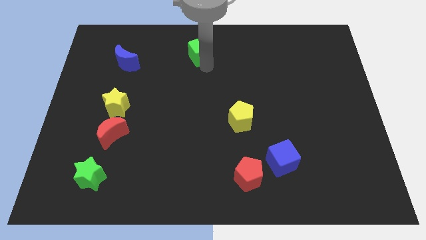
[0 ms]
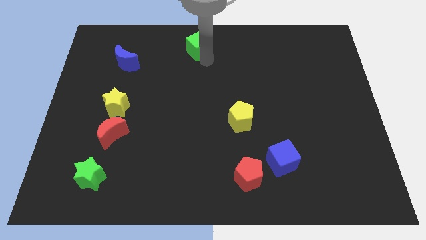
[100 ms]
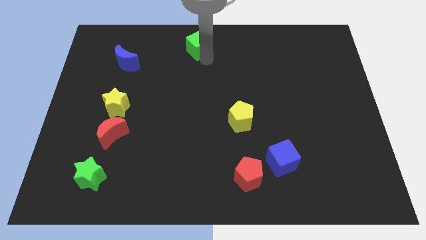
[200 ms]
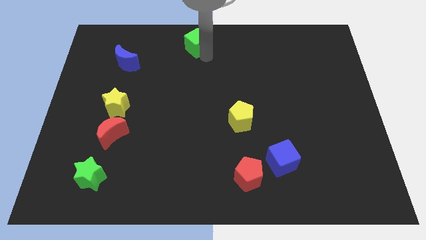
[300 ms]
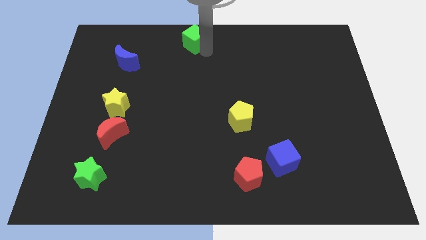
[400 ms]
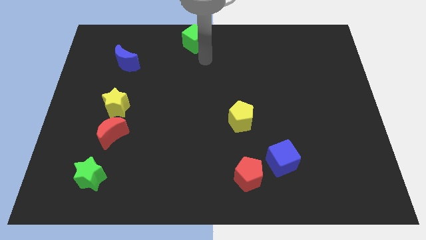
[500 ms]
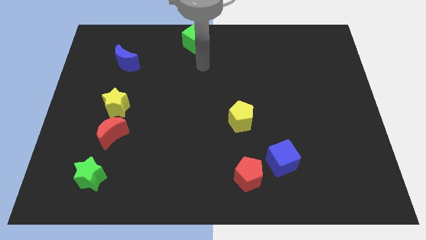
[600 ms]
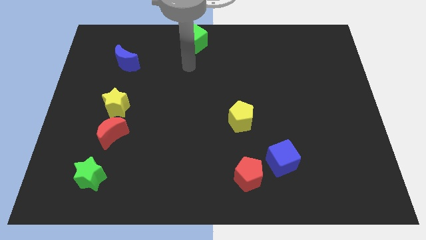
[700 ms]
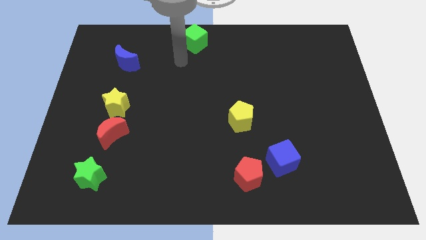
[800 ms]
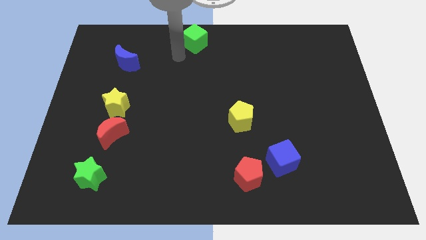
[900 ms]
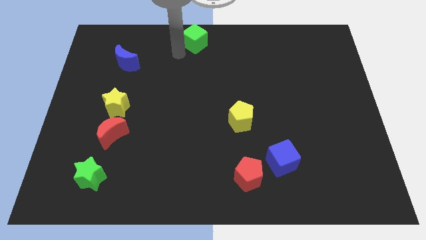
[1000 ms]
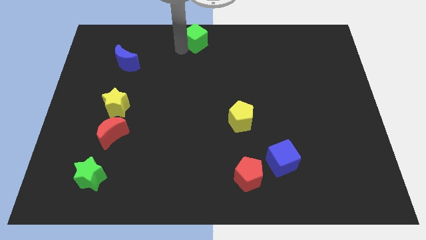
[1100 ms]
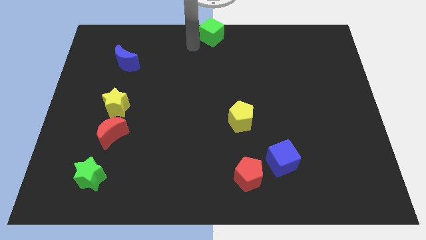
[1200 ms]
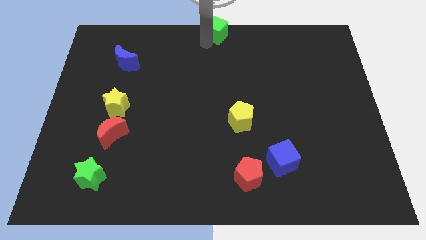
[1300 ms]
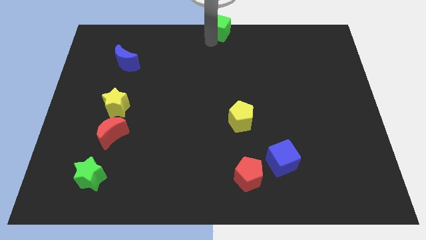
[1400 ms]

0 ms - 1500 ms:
move the green cube to the top center of the board

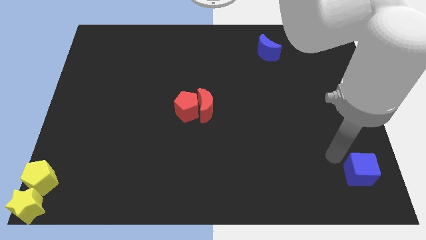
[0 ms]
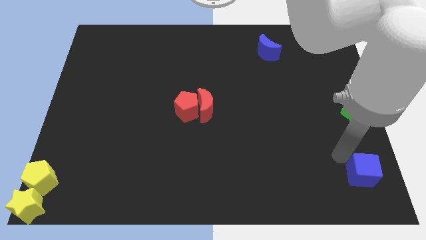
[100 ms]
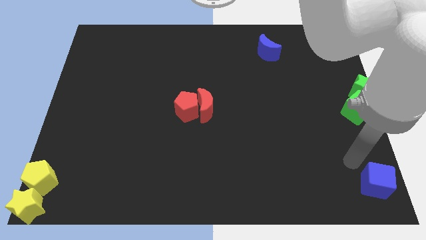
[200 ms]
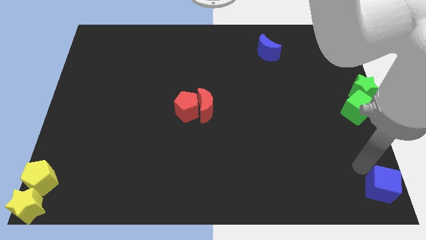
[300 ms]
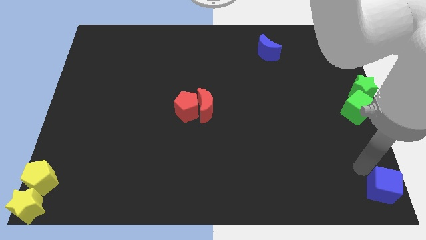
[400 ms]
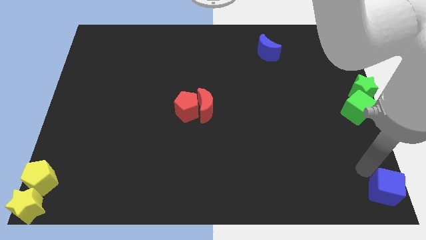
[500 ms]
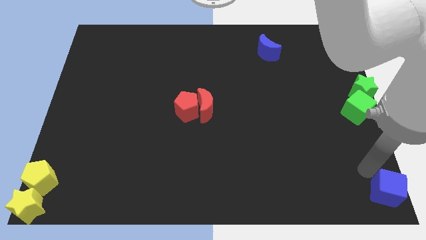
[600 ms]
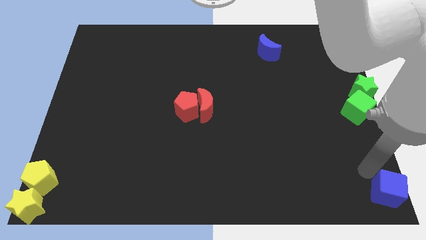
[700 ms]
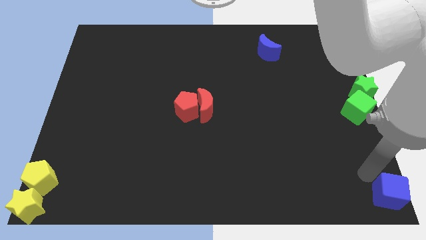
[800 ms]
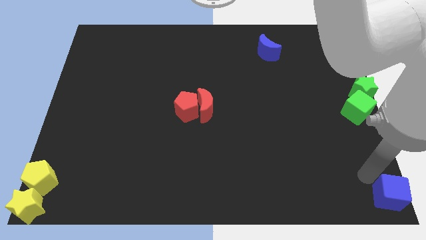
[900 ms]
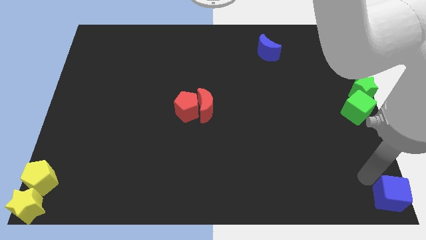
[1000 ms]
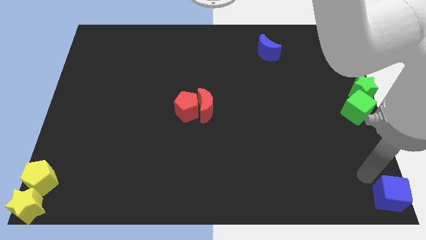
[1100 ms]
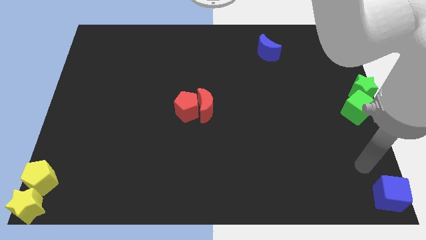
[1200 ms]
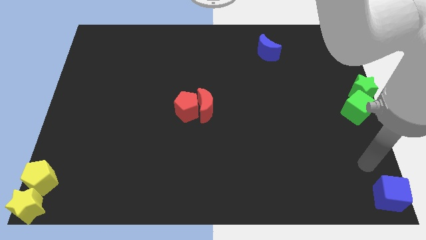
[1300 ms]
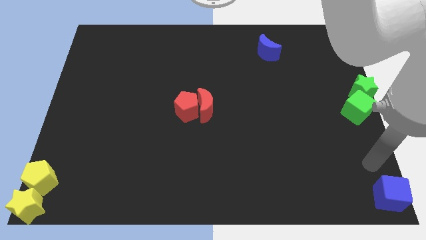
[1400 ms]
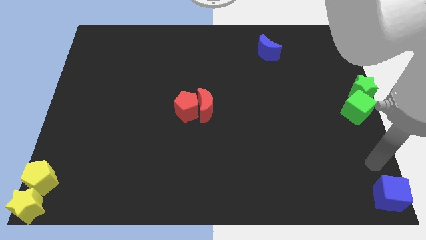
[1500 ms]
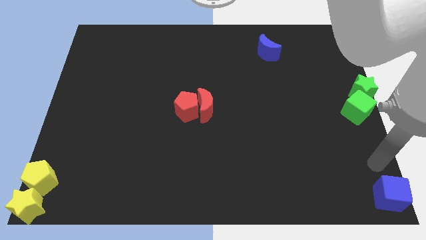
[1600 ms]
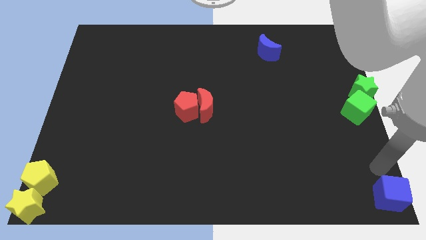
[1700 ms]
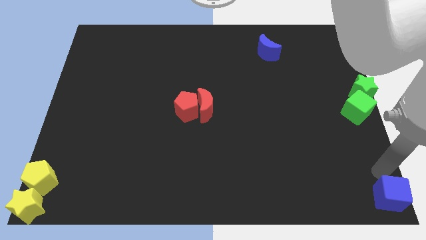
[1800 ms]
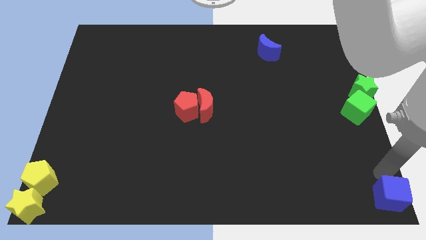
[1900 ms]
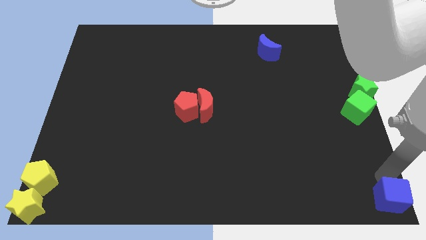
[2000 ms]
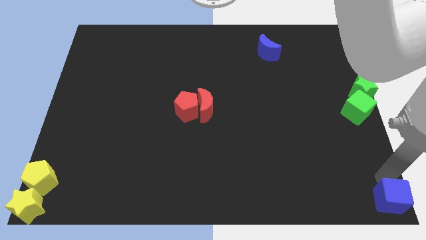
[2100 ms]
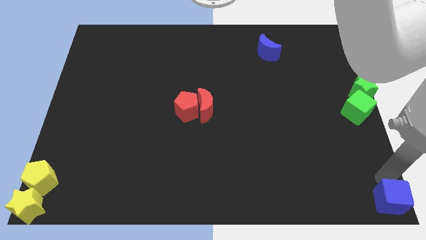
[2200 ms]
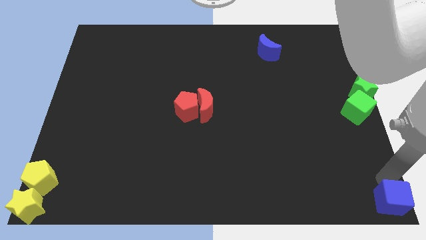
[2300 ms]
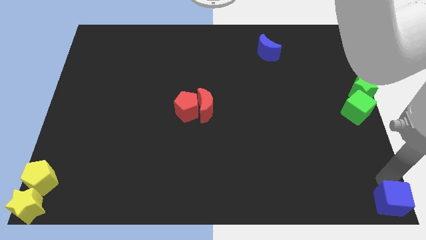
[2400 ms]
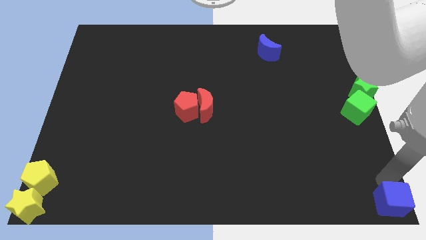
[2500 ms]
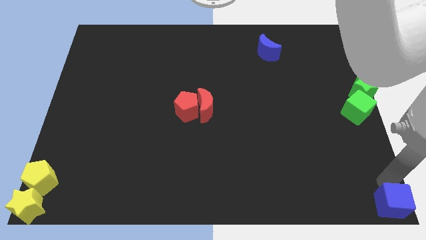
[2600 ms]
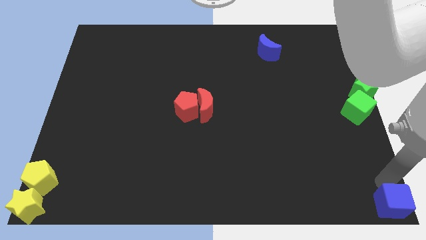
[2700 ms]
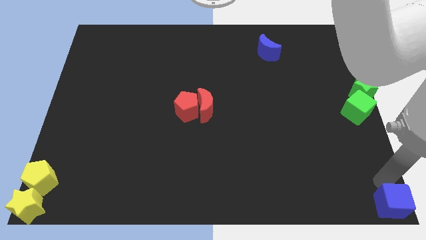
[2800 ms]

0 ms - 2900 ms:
push the blue cube to the bottom right corner

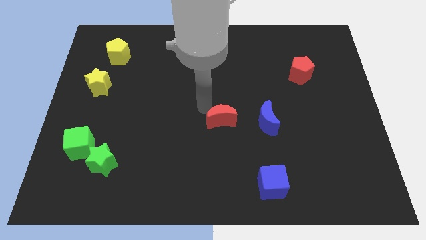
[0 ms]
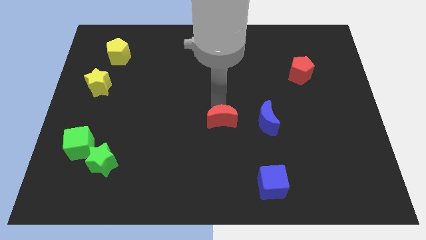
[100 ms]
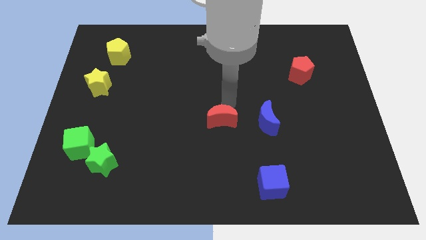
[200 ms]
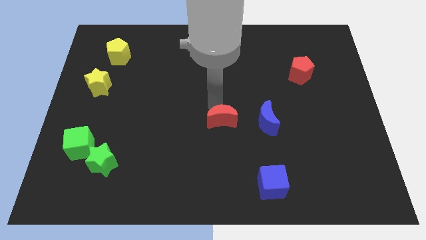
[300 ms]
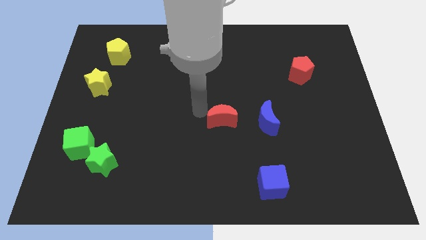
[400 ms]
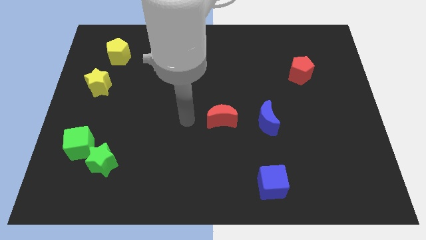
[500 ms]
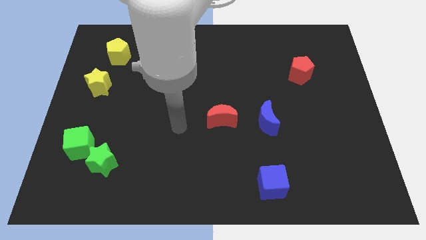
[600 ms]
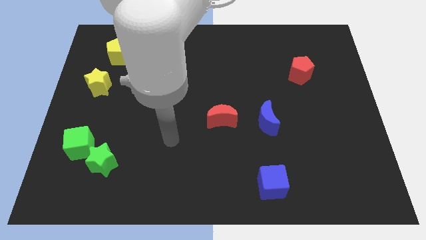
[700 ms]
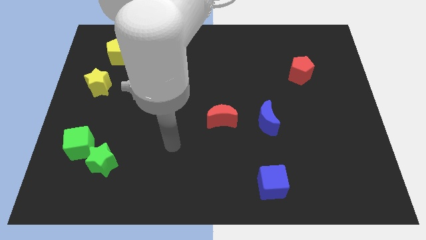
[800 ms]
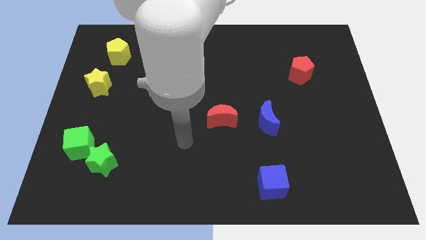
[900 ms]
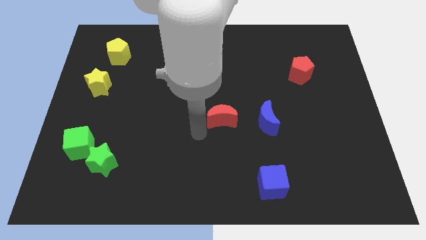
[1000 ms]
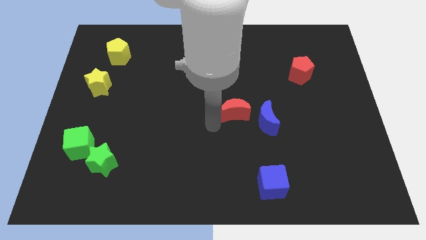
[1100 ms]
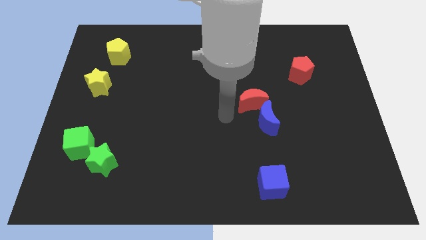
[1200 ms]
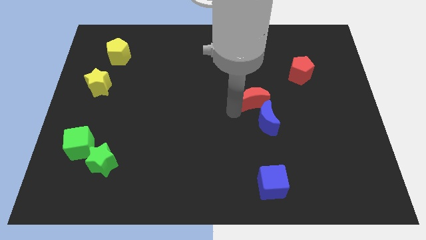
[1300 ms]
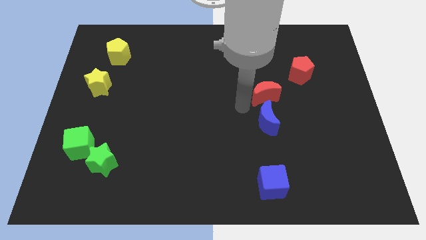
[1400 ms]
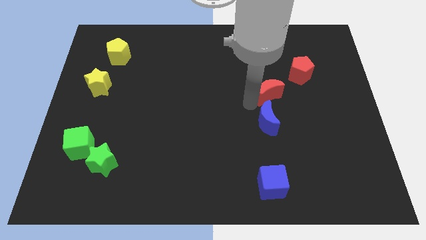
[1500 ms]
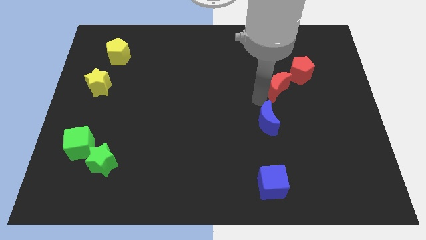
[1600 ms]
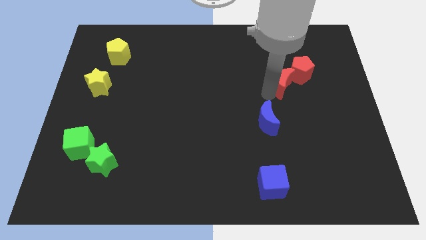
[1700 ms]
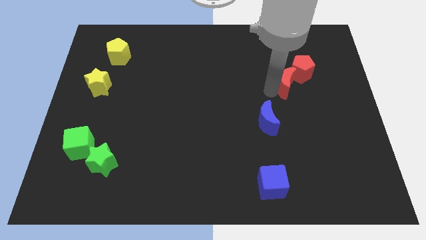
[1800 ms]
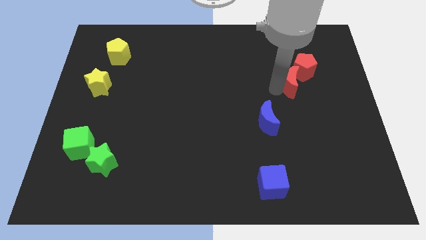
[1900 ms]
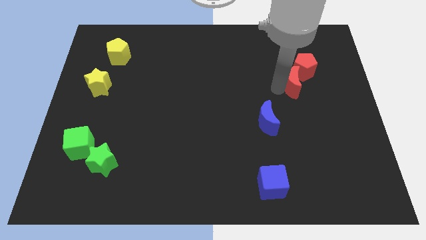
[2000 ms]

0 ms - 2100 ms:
push red moon into red pentagon

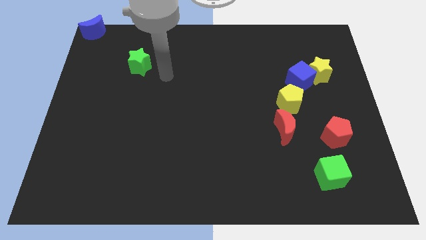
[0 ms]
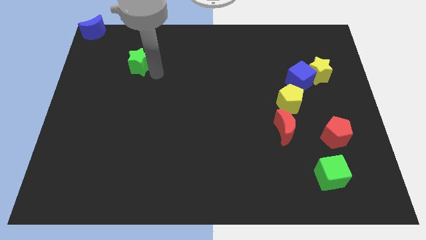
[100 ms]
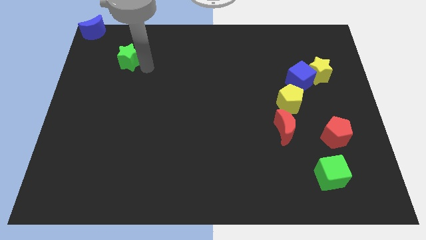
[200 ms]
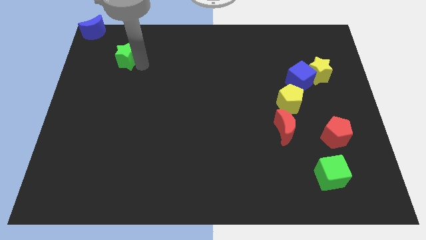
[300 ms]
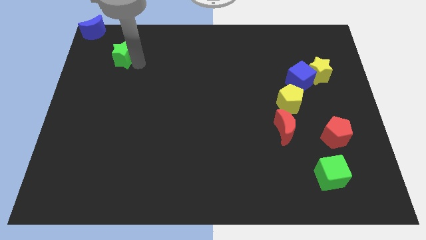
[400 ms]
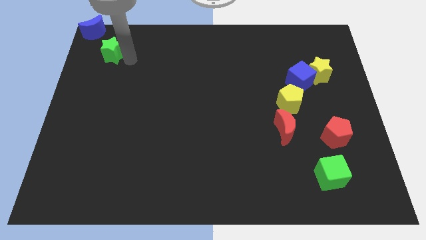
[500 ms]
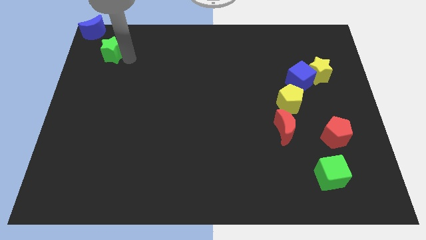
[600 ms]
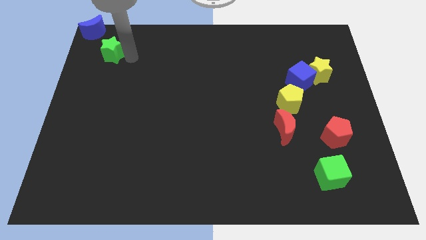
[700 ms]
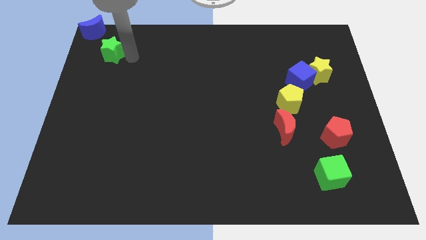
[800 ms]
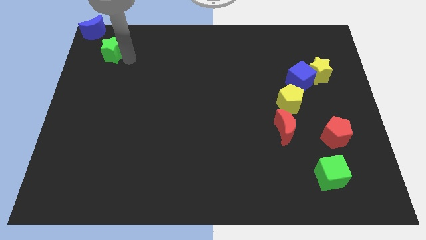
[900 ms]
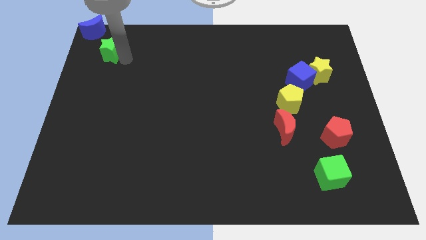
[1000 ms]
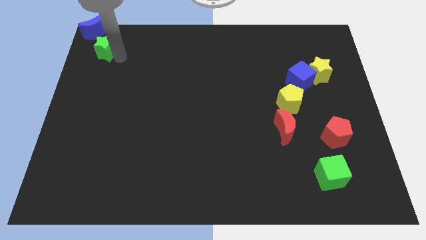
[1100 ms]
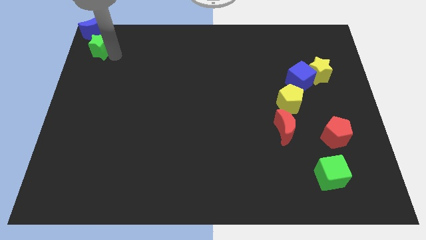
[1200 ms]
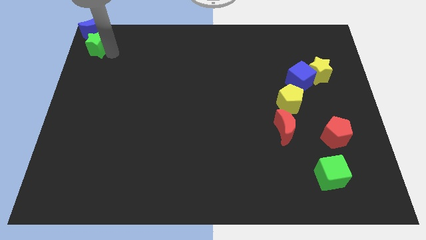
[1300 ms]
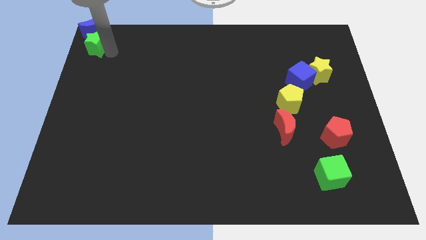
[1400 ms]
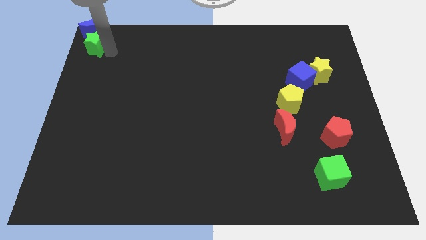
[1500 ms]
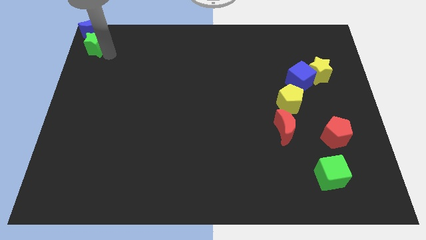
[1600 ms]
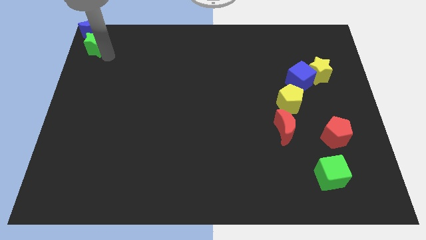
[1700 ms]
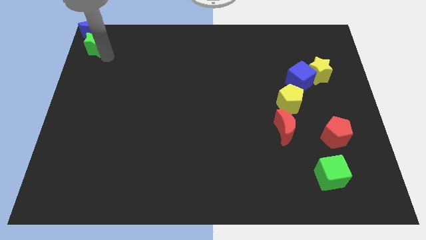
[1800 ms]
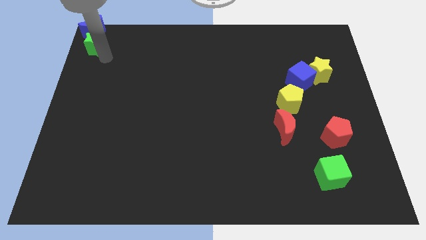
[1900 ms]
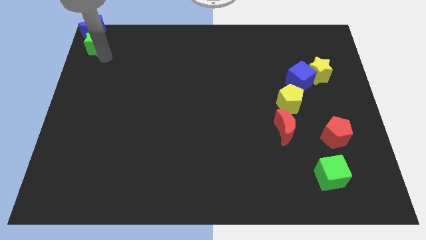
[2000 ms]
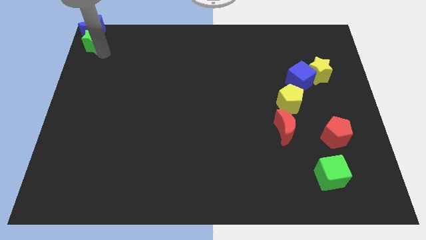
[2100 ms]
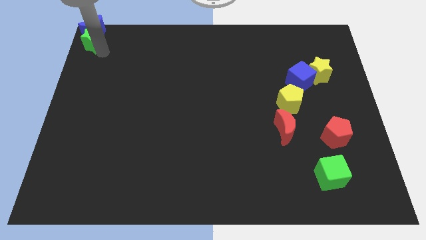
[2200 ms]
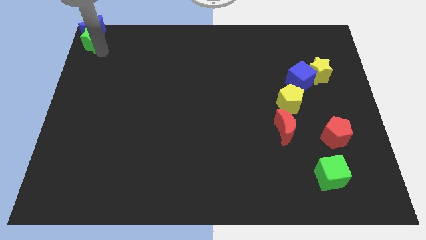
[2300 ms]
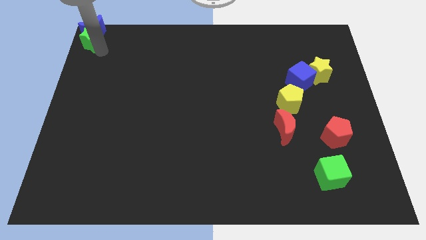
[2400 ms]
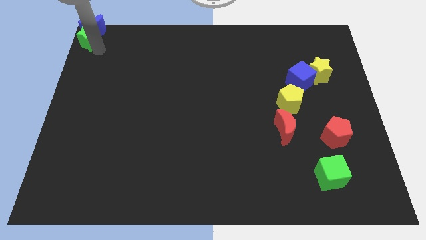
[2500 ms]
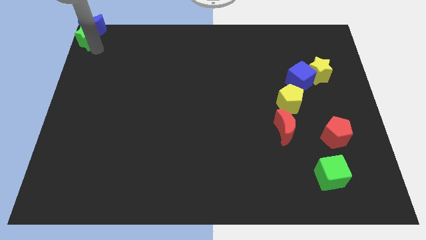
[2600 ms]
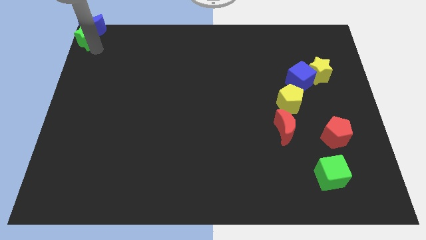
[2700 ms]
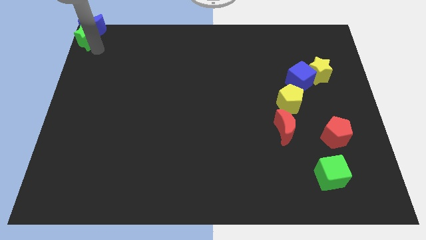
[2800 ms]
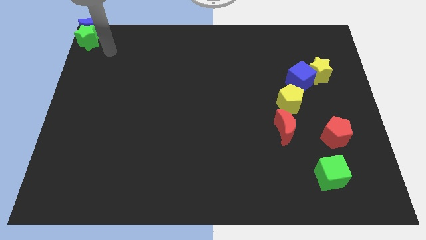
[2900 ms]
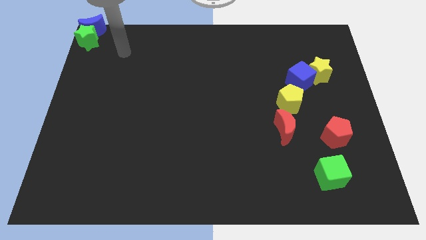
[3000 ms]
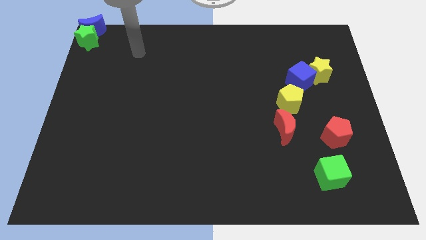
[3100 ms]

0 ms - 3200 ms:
place the green star to the bottom side of the blue moon
